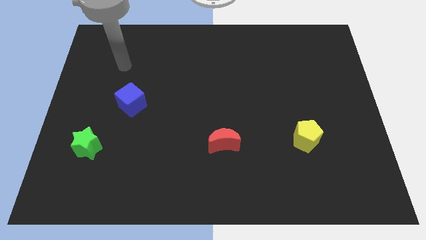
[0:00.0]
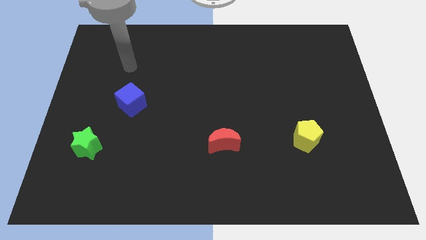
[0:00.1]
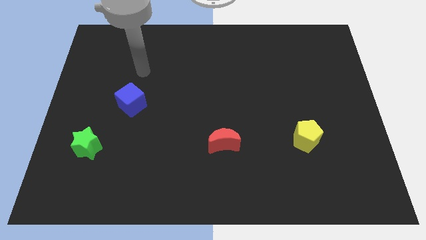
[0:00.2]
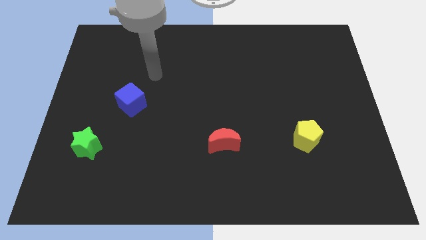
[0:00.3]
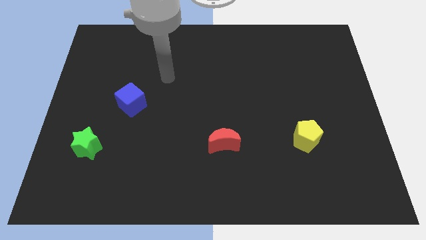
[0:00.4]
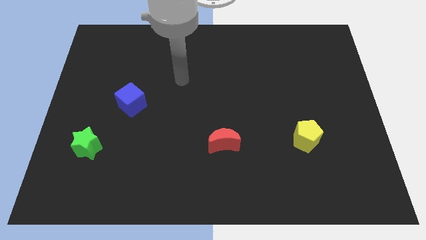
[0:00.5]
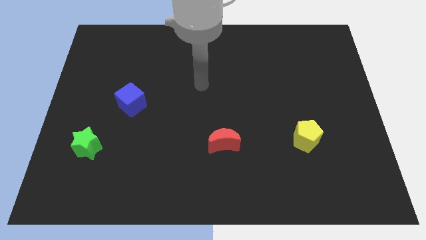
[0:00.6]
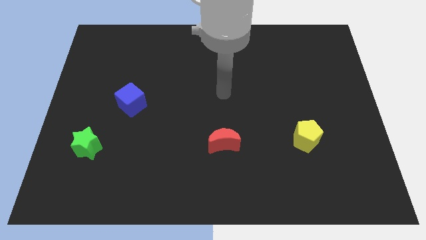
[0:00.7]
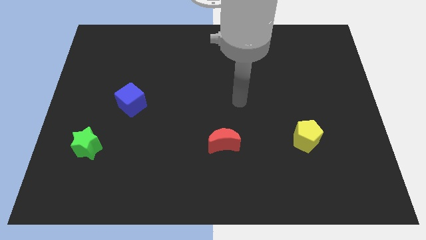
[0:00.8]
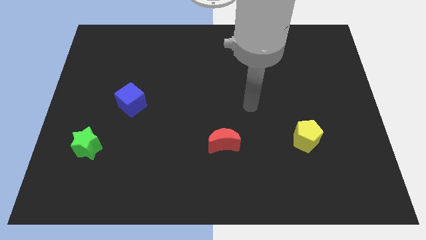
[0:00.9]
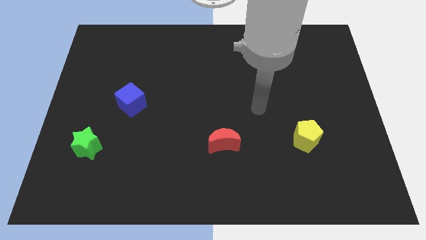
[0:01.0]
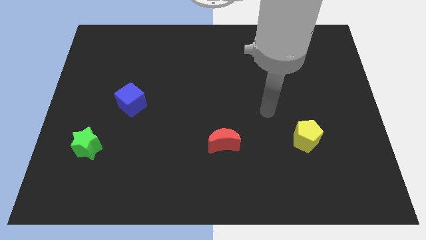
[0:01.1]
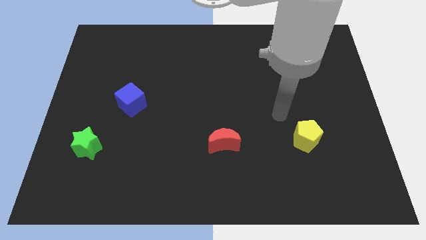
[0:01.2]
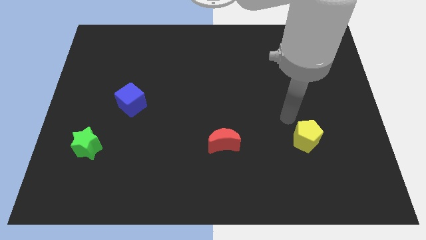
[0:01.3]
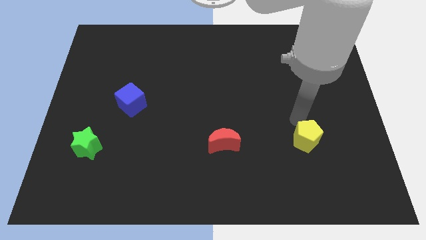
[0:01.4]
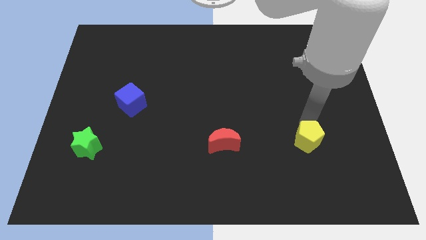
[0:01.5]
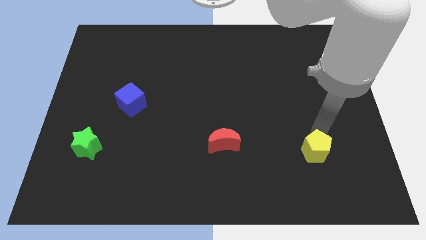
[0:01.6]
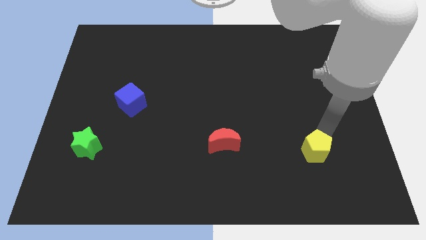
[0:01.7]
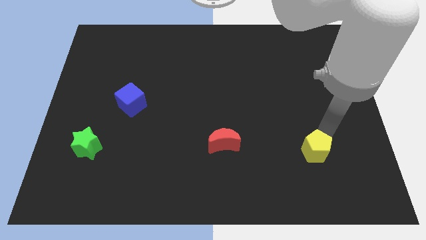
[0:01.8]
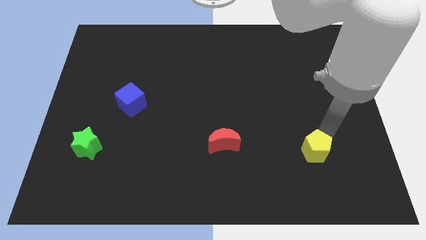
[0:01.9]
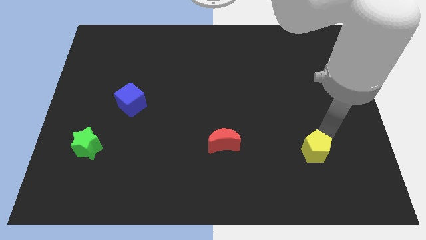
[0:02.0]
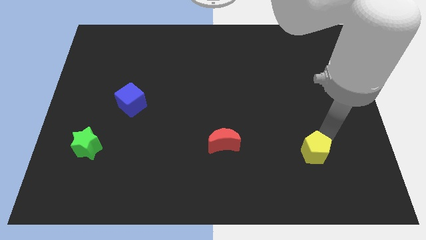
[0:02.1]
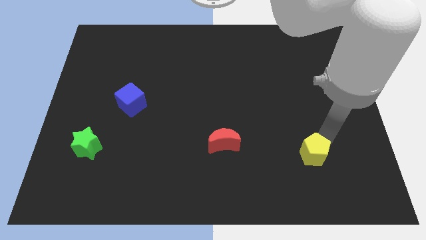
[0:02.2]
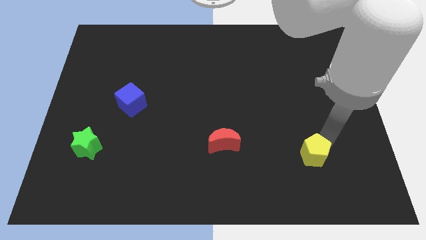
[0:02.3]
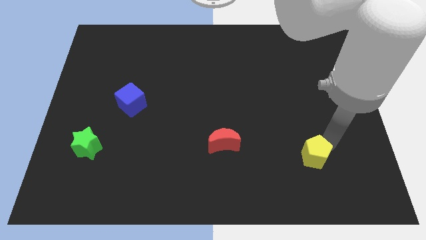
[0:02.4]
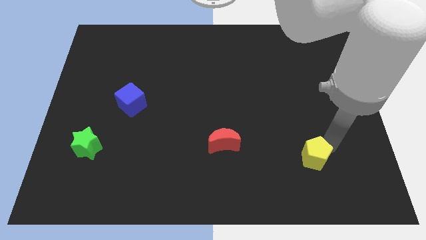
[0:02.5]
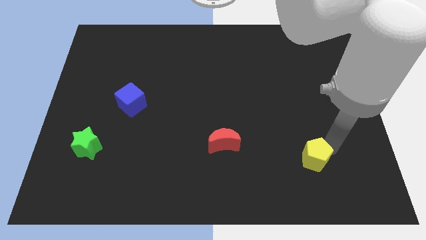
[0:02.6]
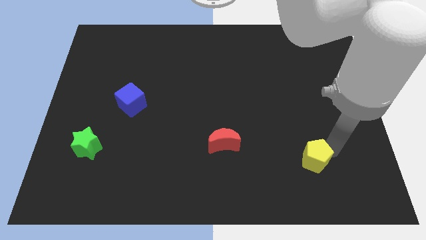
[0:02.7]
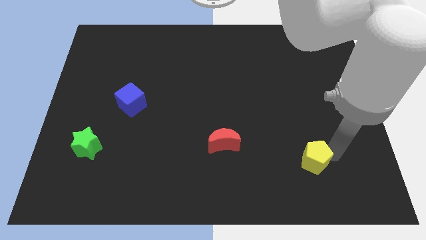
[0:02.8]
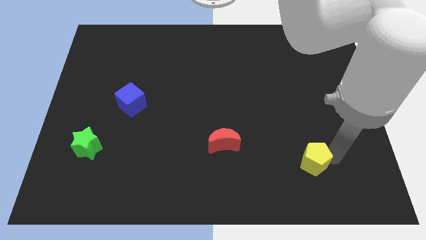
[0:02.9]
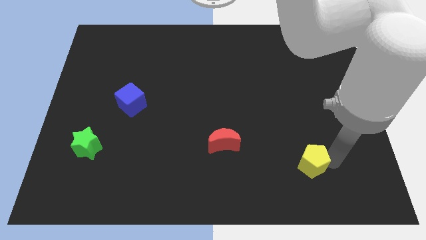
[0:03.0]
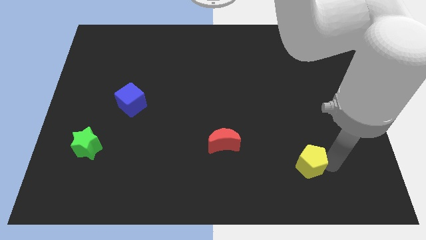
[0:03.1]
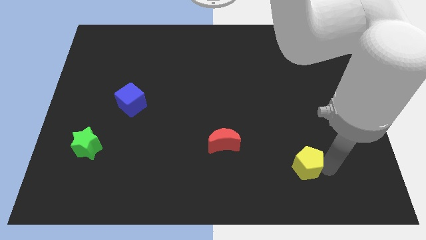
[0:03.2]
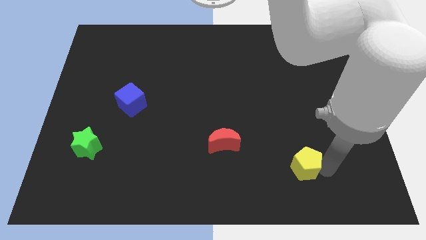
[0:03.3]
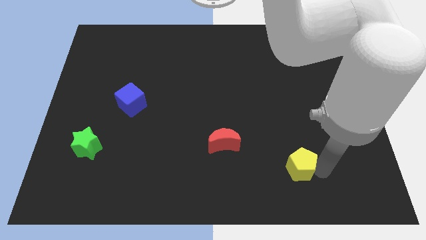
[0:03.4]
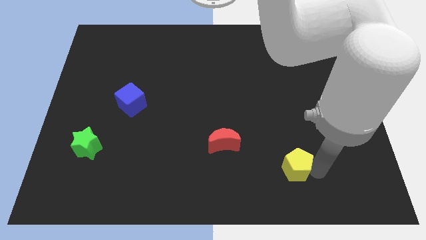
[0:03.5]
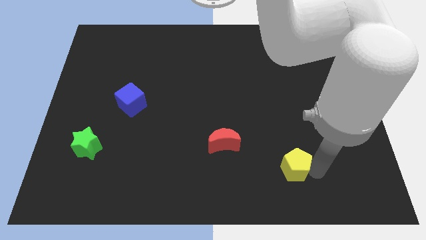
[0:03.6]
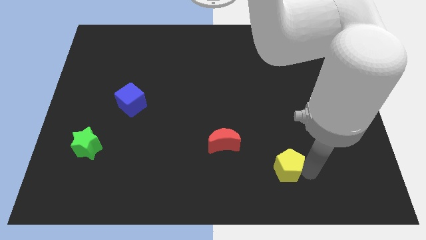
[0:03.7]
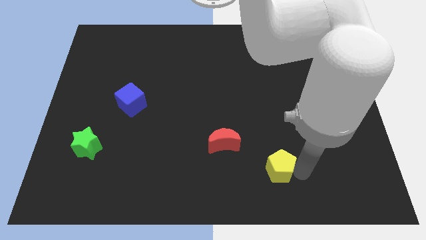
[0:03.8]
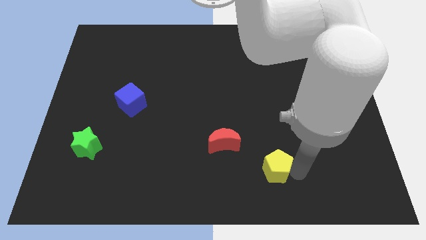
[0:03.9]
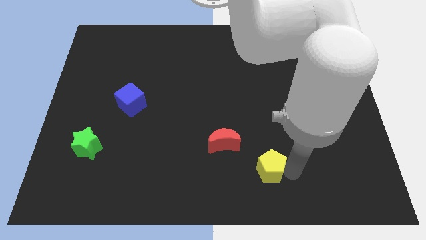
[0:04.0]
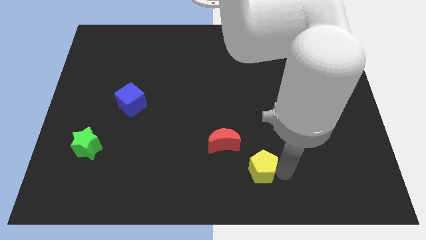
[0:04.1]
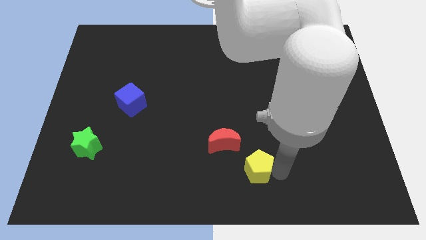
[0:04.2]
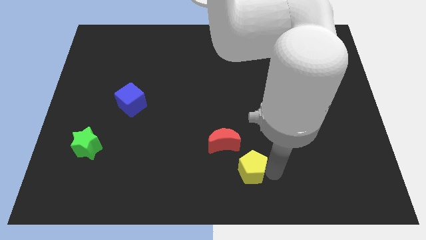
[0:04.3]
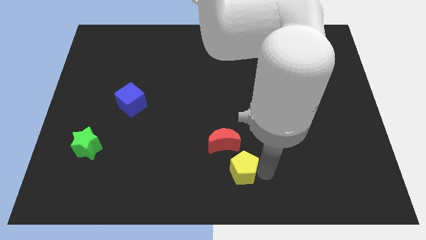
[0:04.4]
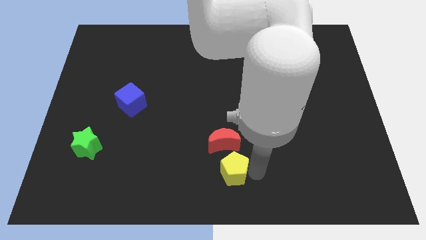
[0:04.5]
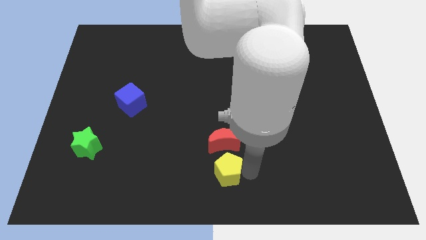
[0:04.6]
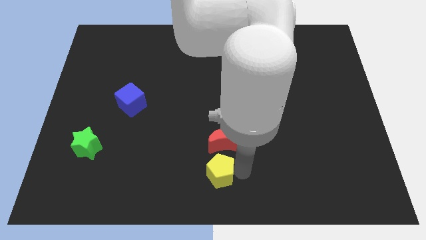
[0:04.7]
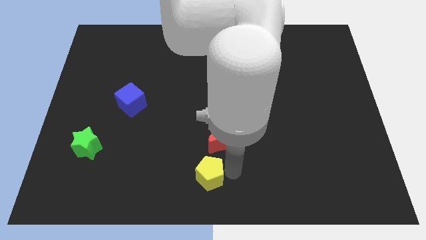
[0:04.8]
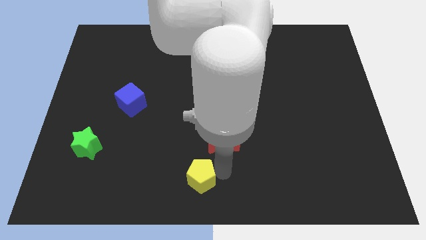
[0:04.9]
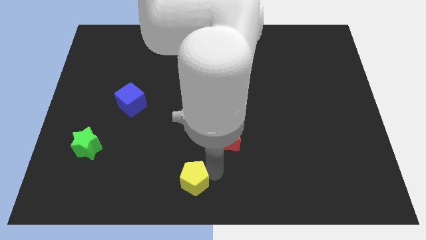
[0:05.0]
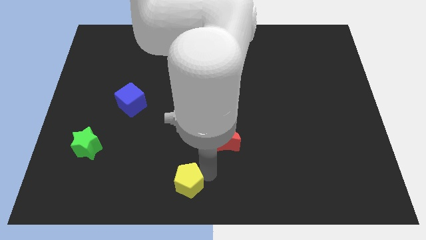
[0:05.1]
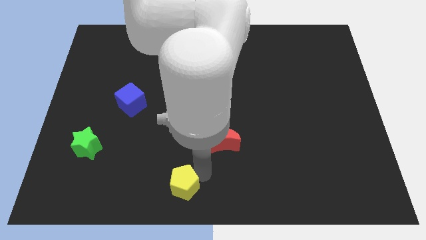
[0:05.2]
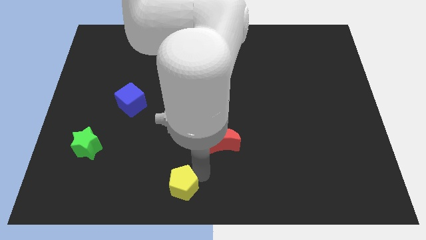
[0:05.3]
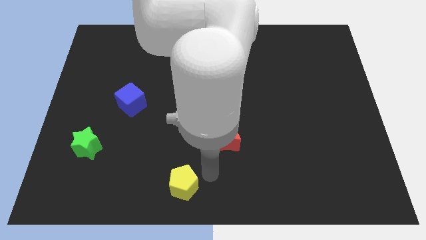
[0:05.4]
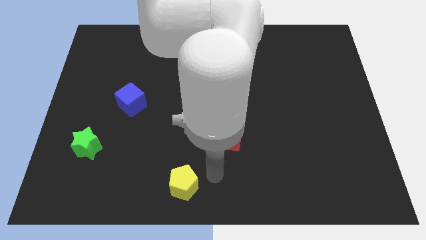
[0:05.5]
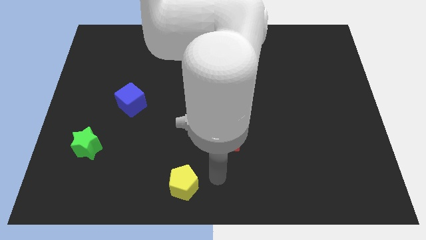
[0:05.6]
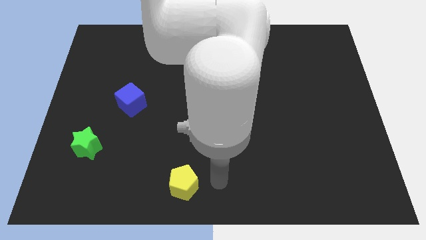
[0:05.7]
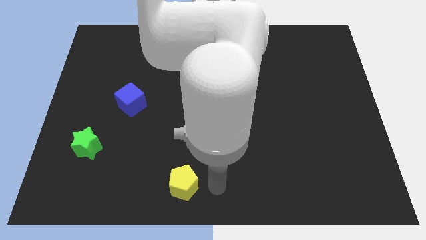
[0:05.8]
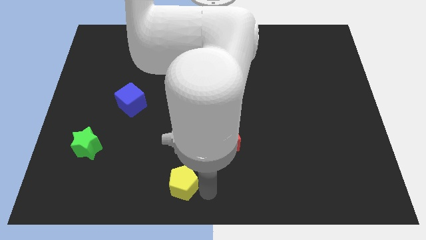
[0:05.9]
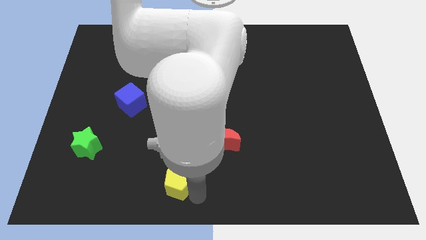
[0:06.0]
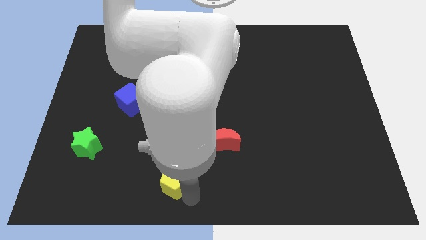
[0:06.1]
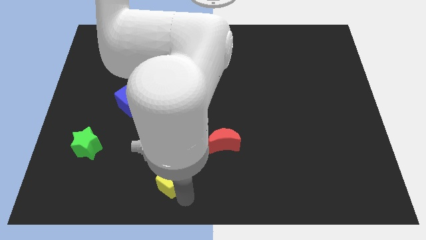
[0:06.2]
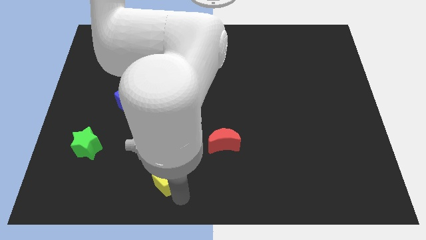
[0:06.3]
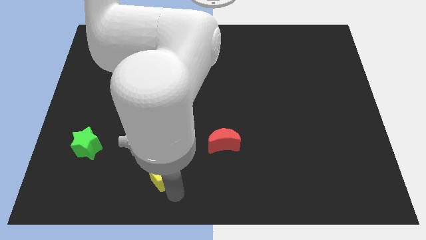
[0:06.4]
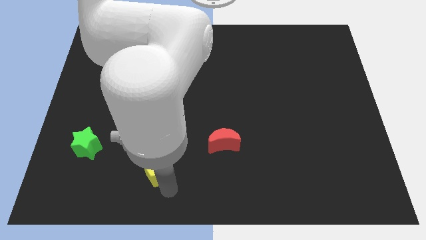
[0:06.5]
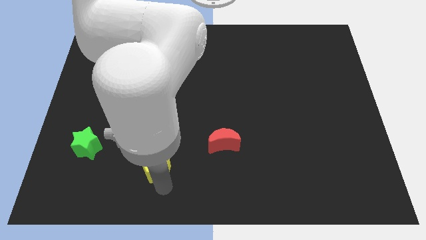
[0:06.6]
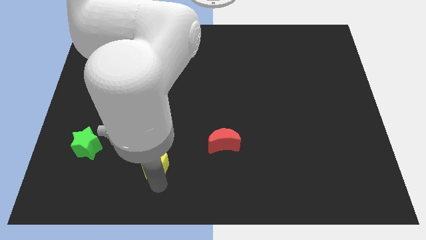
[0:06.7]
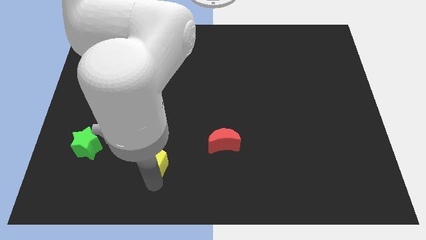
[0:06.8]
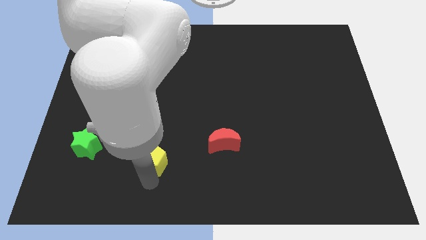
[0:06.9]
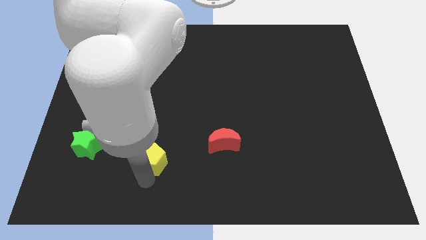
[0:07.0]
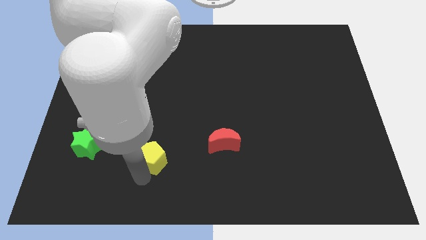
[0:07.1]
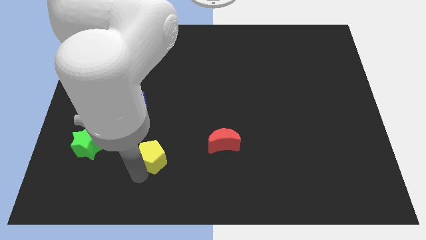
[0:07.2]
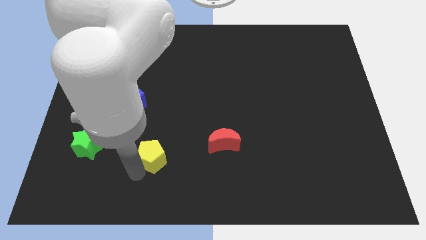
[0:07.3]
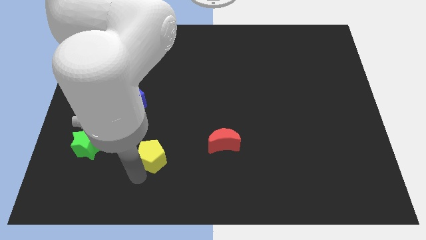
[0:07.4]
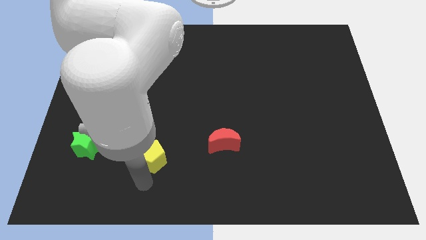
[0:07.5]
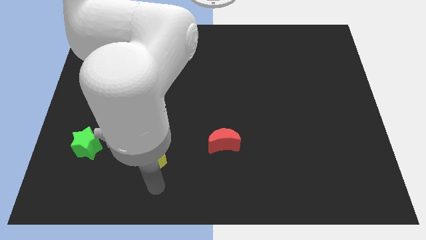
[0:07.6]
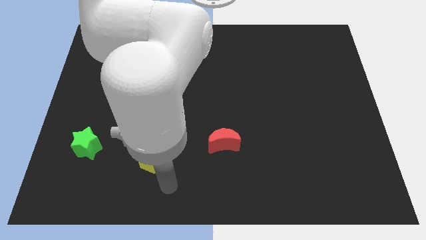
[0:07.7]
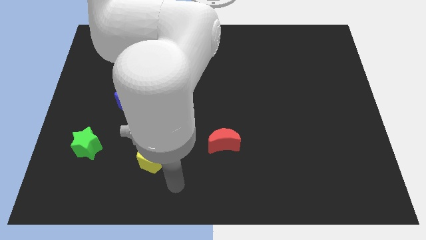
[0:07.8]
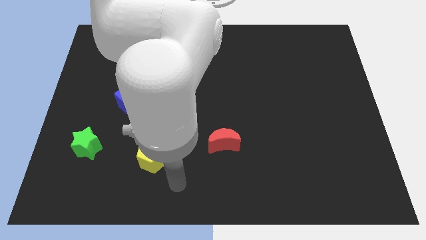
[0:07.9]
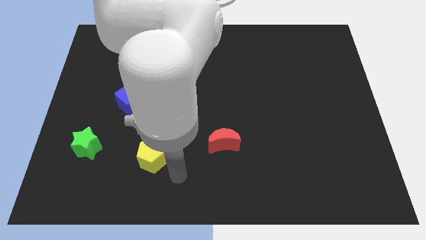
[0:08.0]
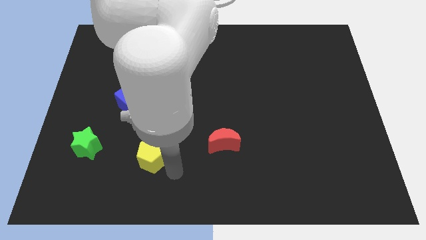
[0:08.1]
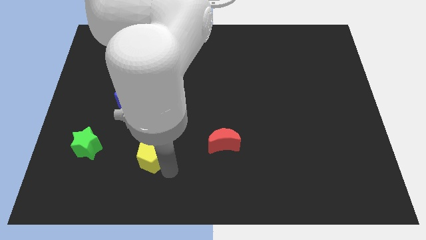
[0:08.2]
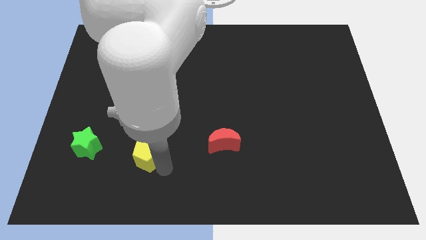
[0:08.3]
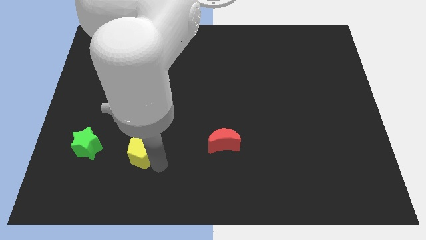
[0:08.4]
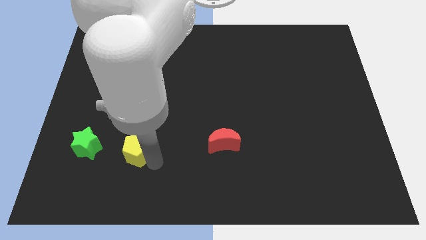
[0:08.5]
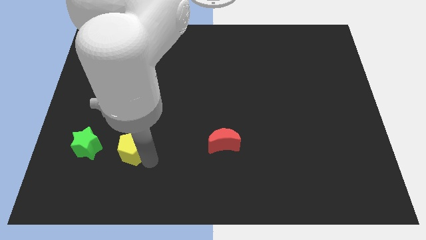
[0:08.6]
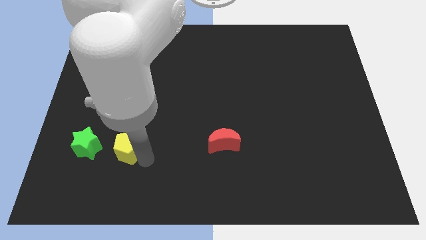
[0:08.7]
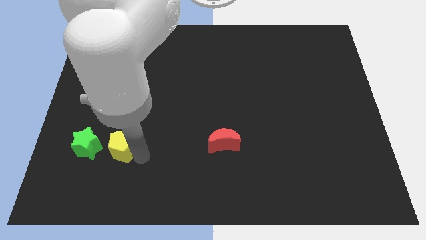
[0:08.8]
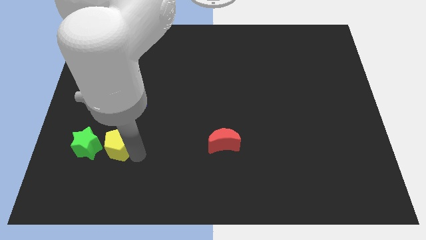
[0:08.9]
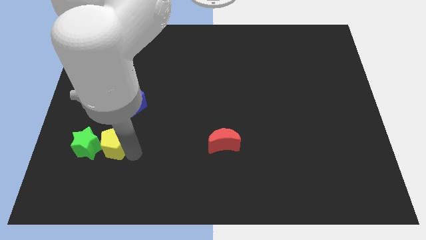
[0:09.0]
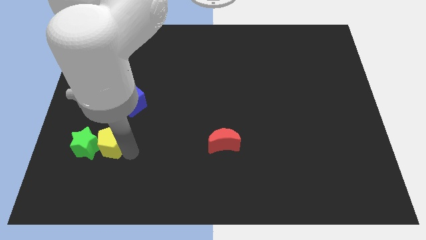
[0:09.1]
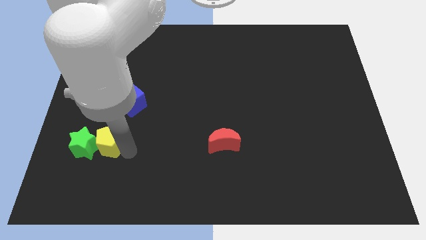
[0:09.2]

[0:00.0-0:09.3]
move the pentagon next to the star
